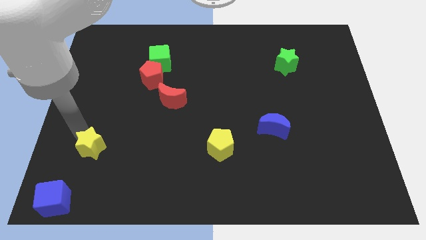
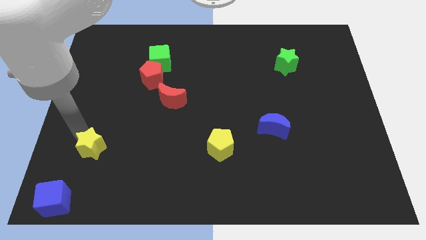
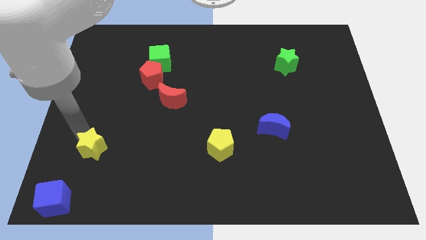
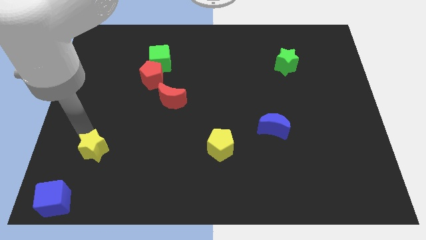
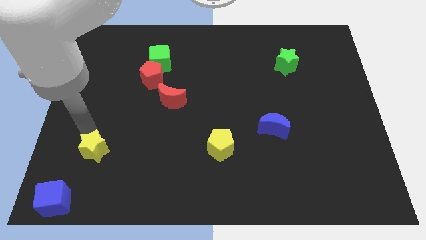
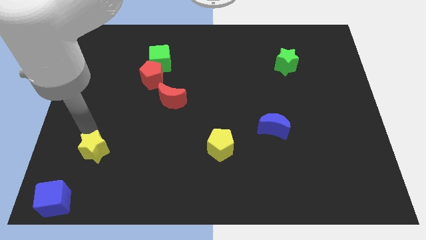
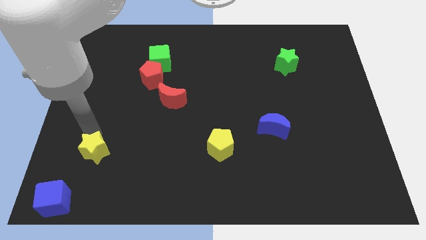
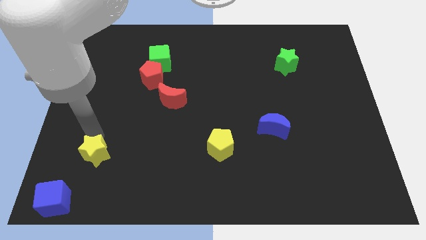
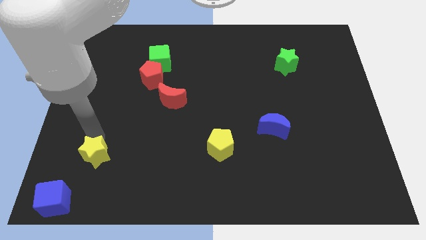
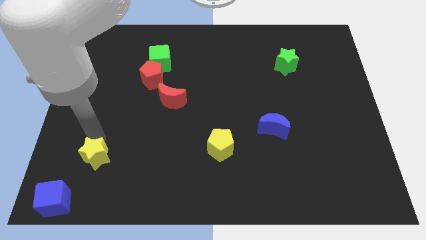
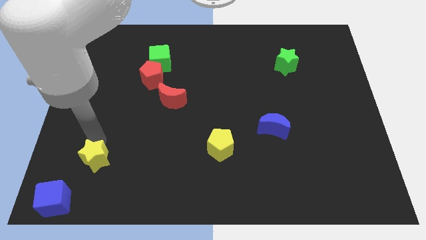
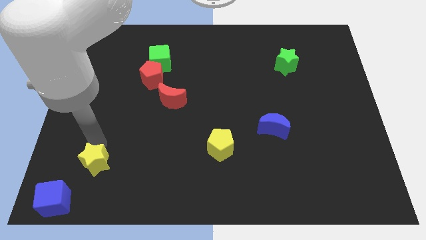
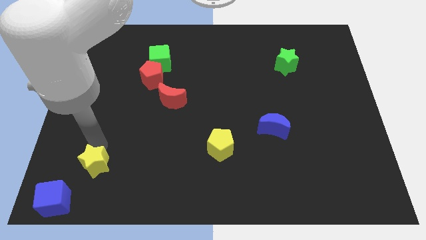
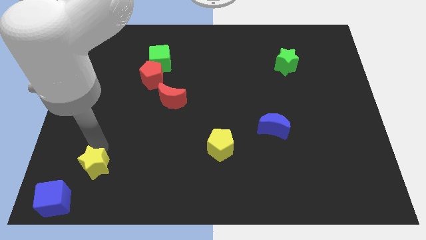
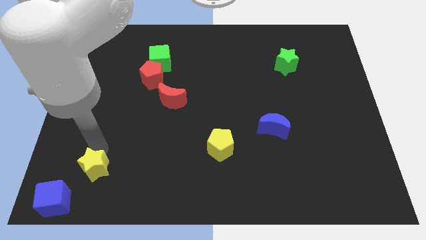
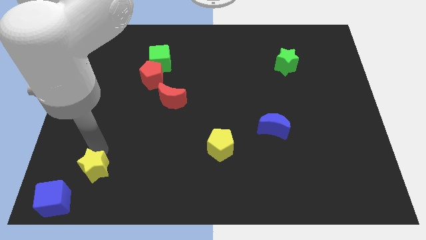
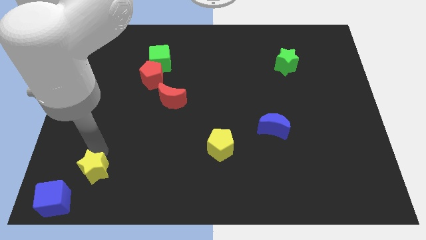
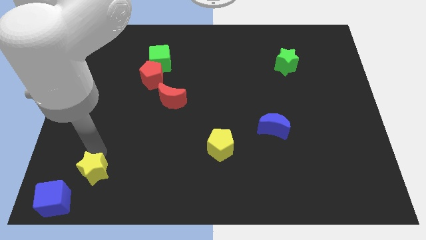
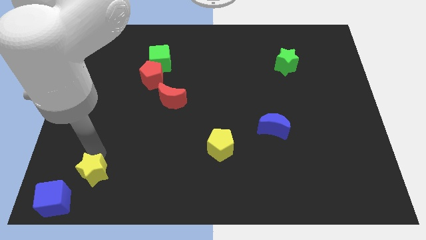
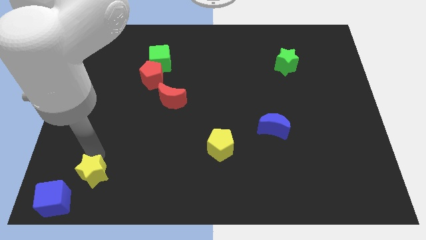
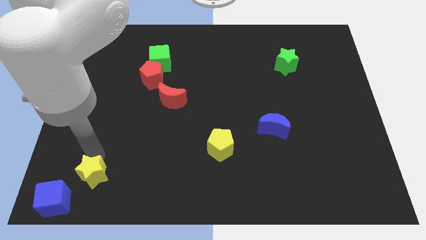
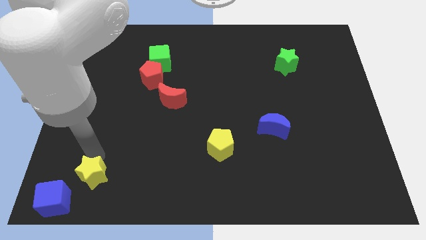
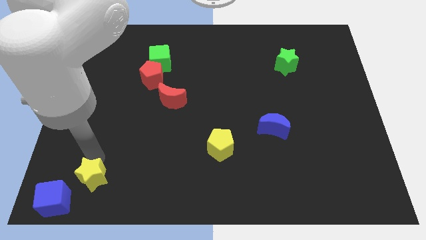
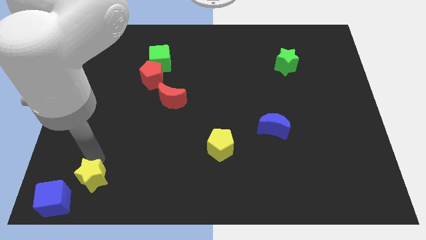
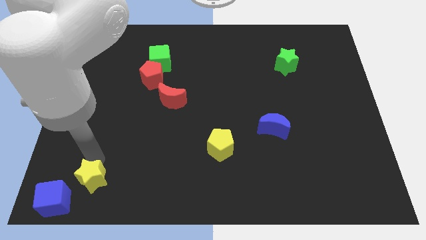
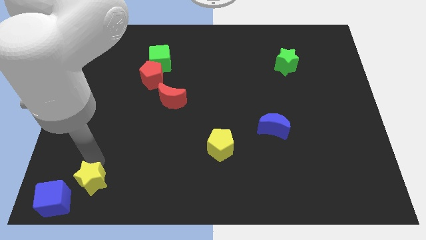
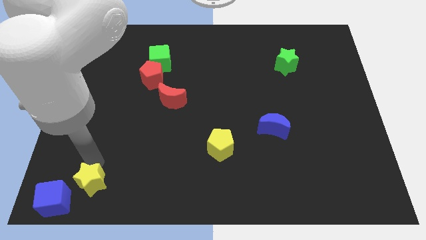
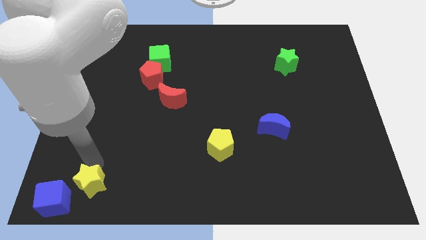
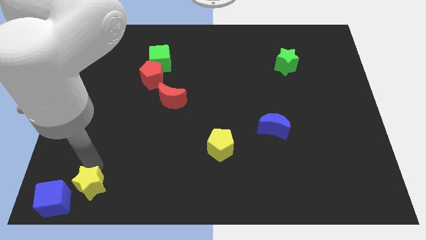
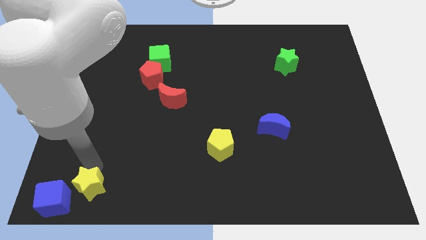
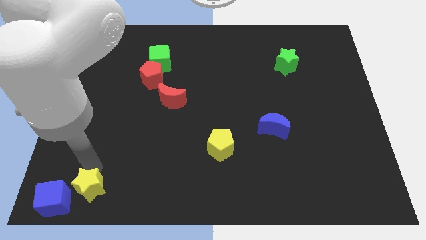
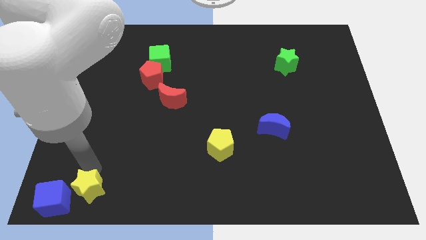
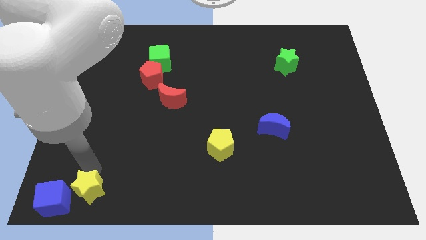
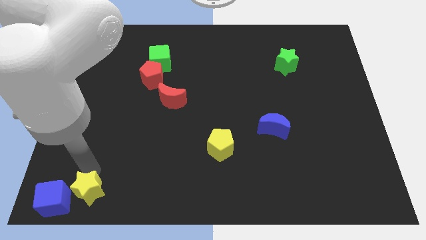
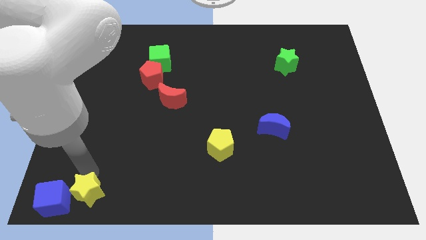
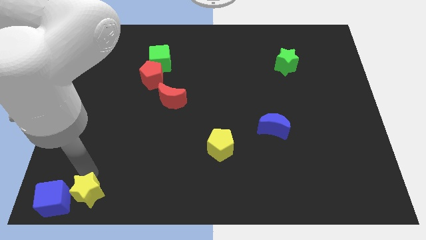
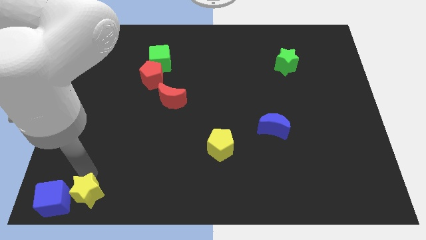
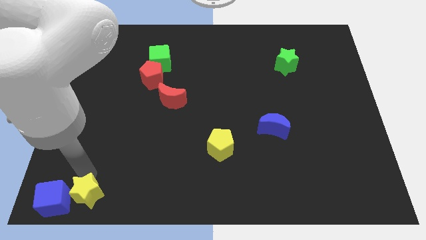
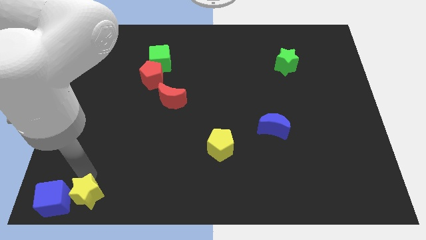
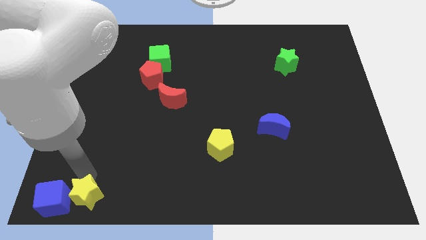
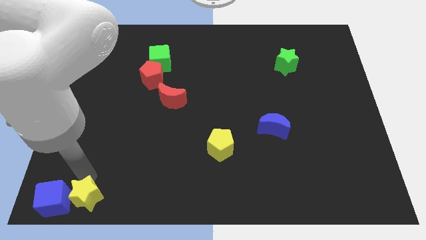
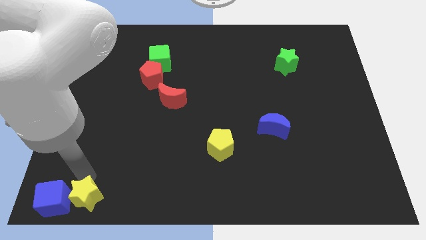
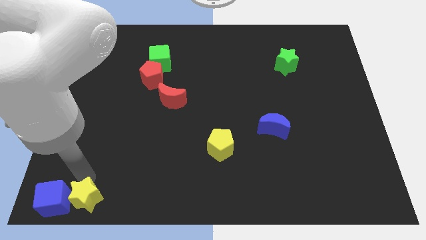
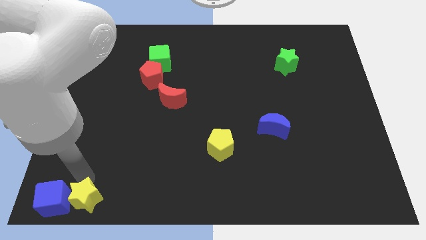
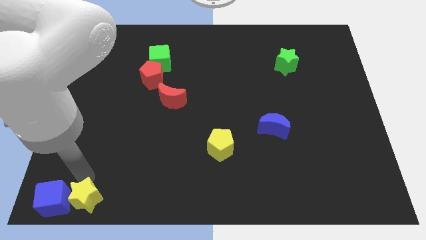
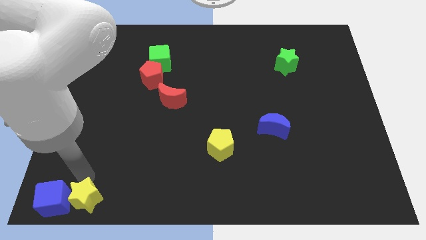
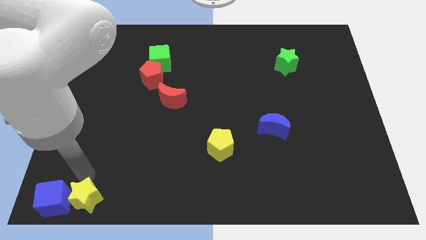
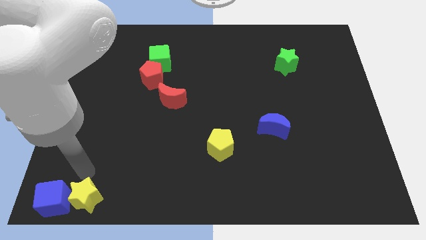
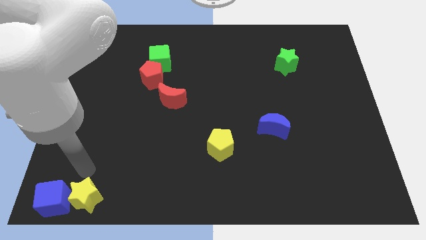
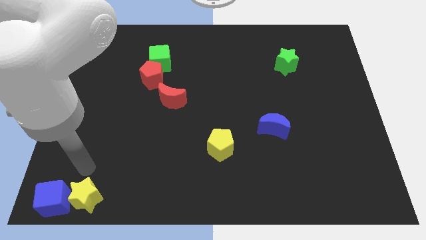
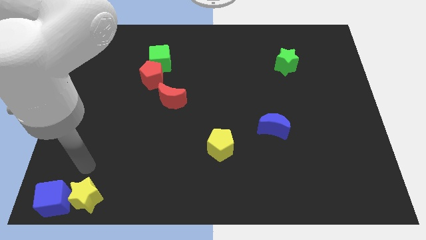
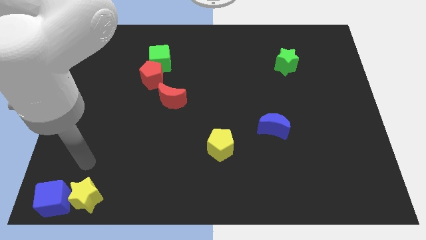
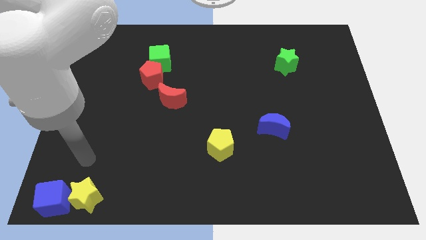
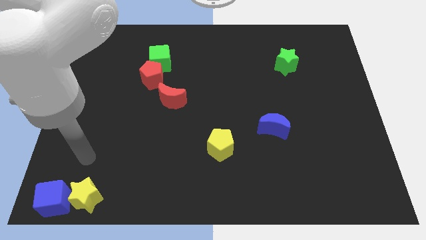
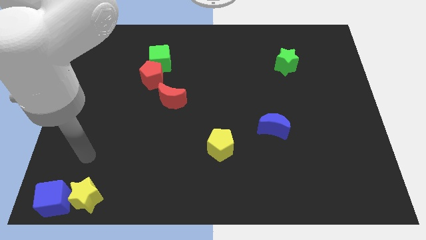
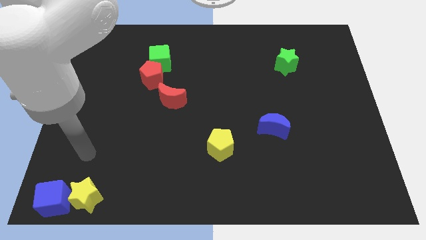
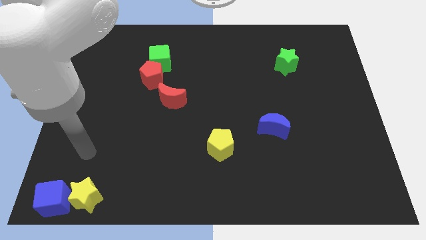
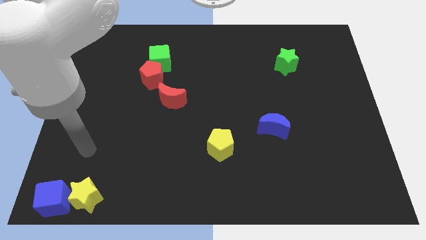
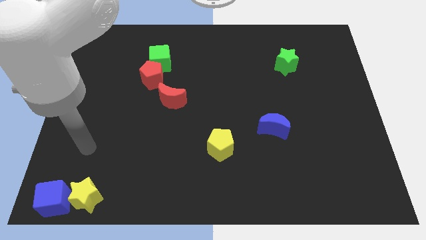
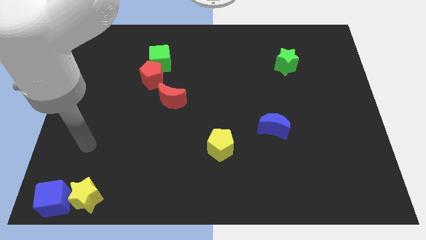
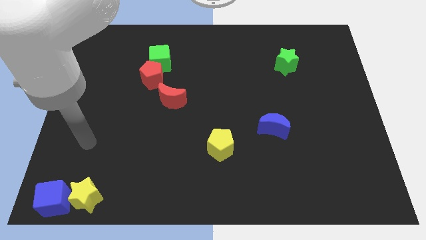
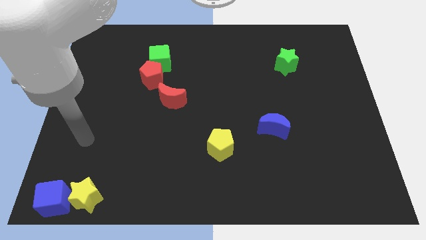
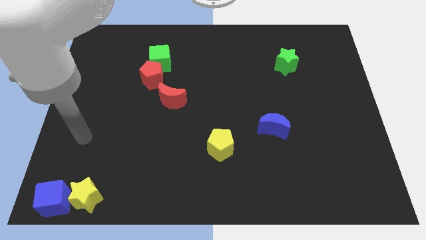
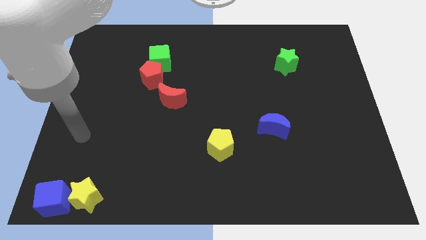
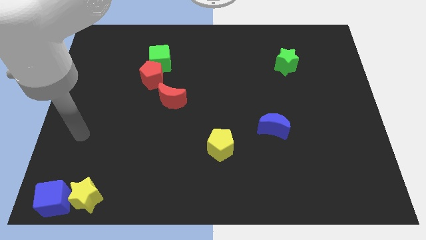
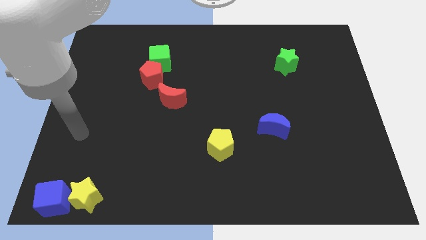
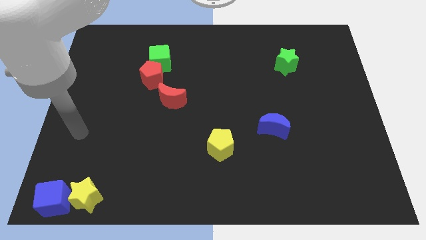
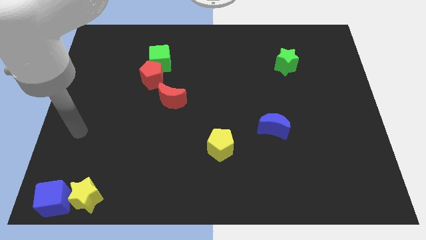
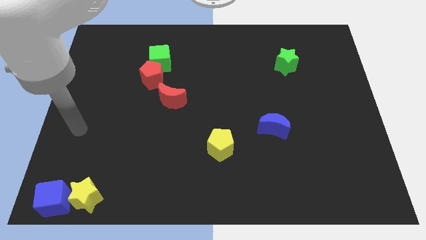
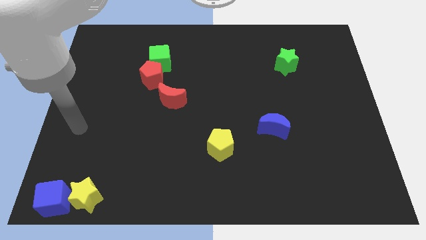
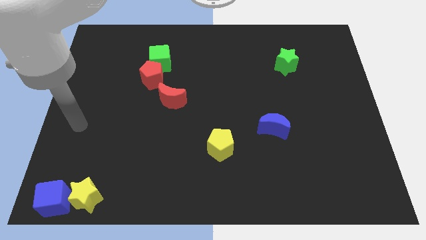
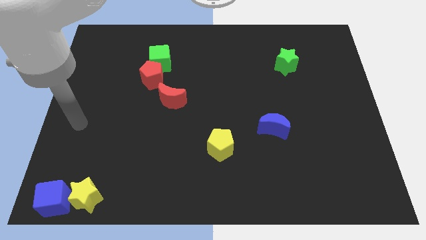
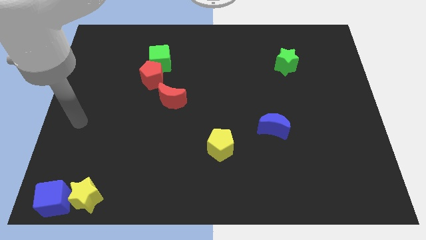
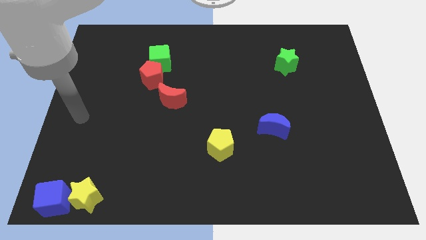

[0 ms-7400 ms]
move the yellow star to the right side of the blue cube

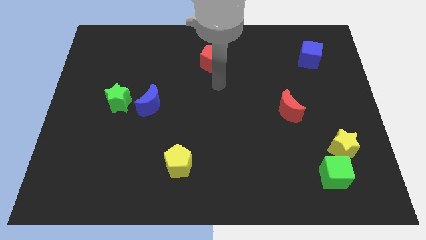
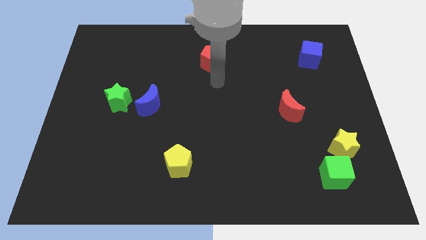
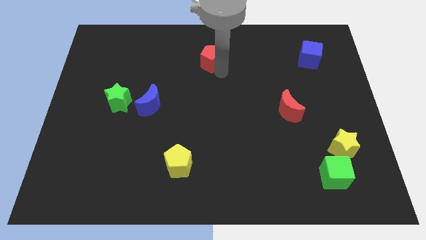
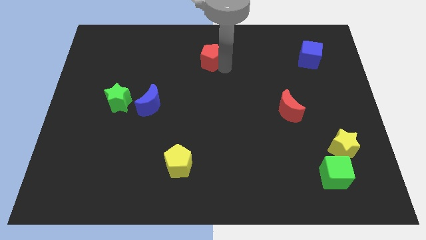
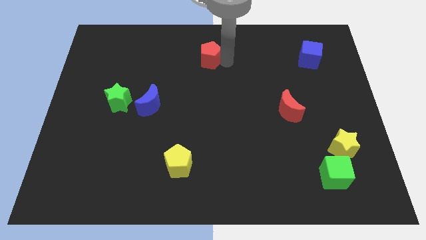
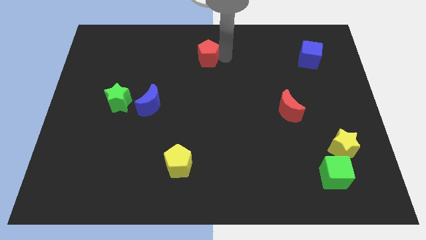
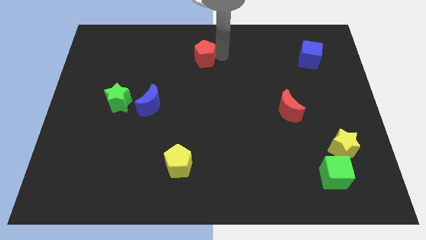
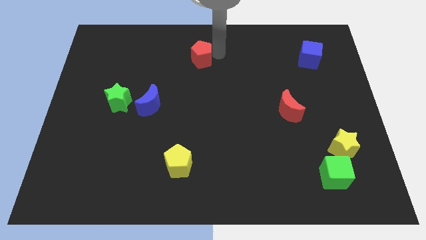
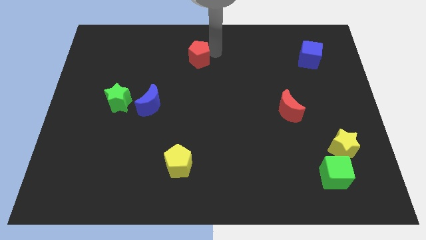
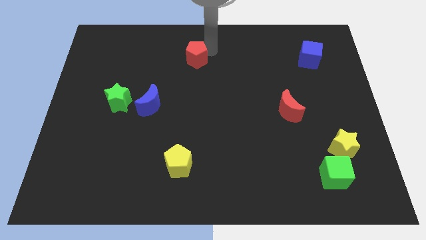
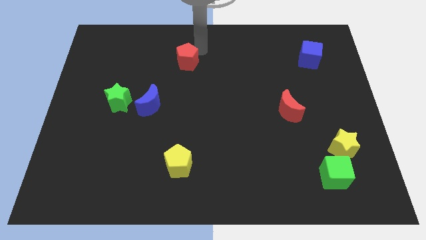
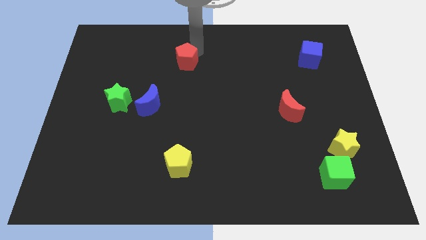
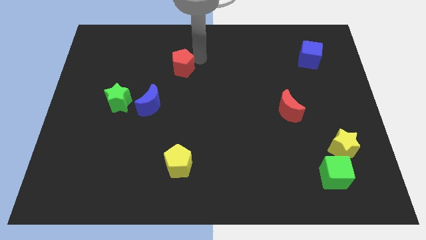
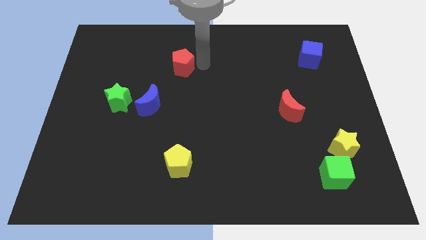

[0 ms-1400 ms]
push the red pentagon towards the left side of the board
